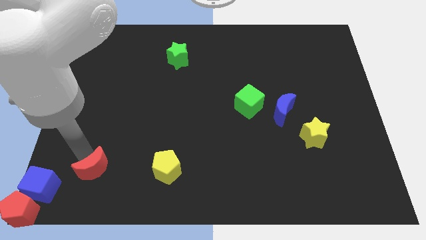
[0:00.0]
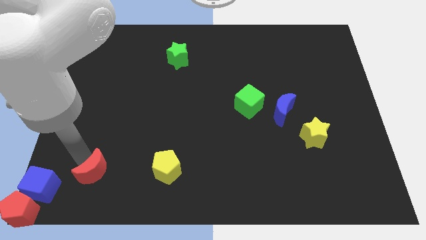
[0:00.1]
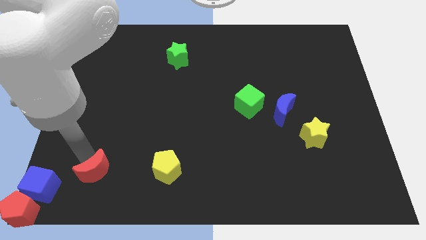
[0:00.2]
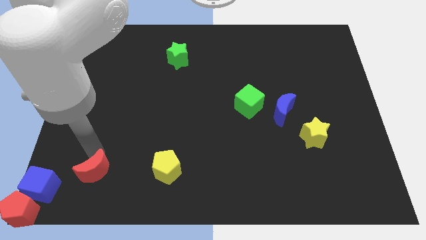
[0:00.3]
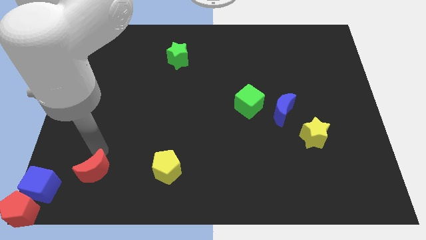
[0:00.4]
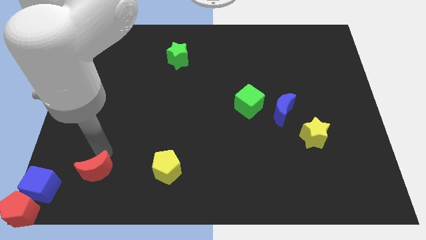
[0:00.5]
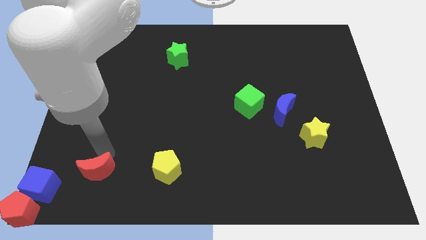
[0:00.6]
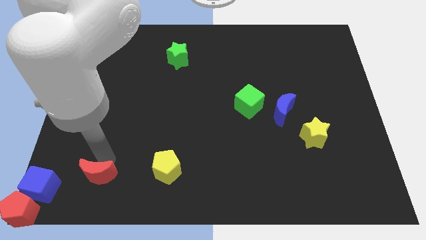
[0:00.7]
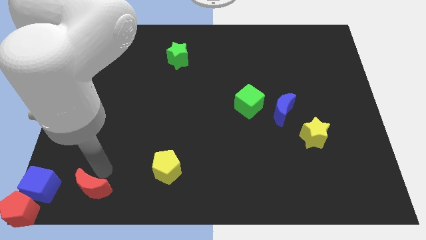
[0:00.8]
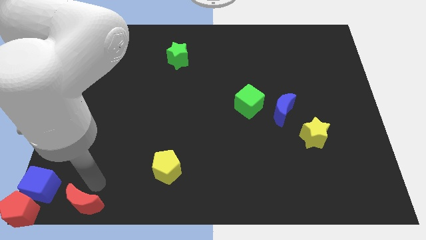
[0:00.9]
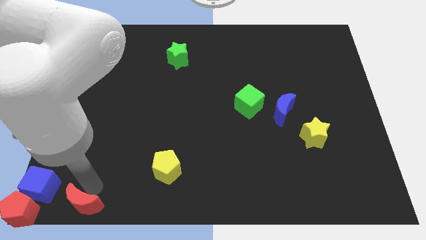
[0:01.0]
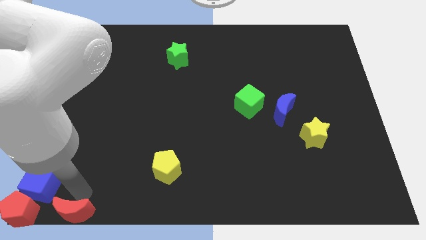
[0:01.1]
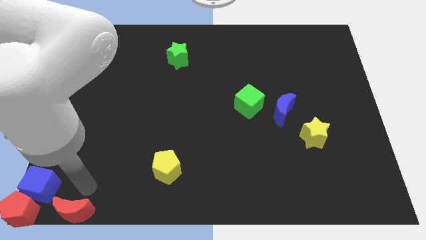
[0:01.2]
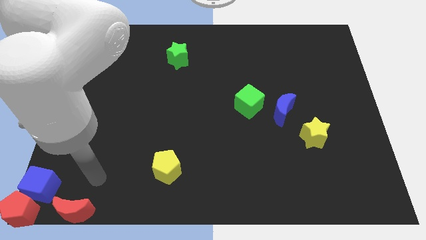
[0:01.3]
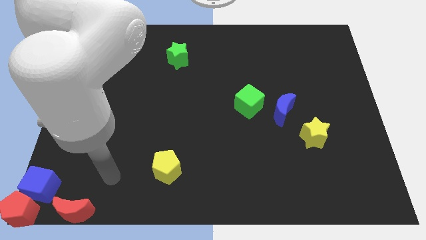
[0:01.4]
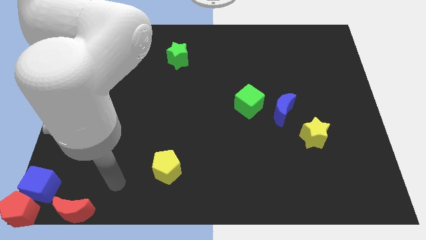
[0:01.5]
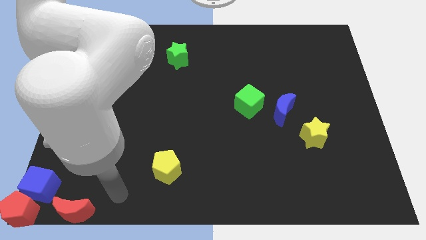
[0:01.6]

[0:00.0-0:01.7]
push red crescent to the right of red pentagon

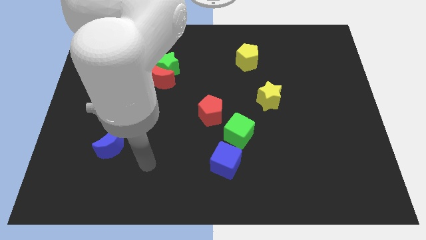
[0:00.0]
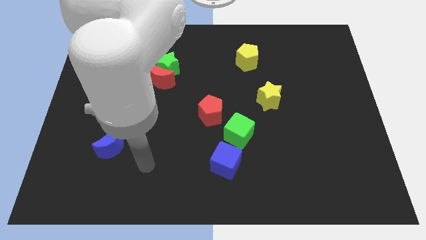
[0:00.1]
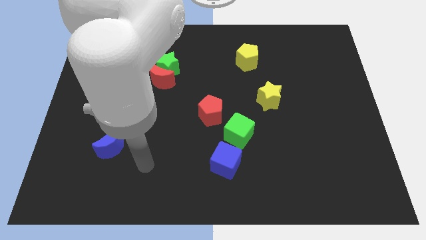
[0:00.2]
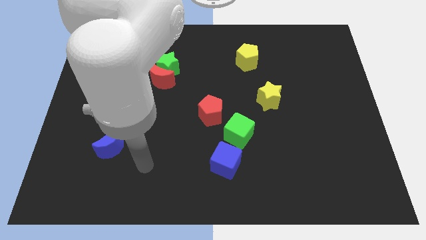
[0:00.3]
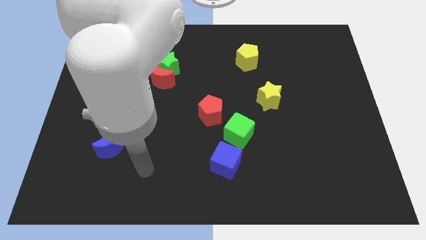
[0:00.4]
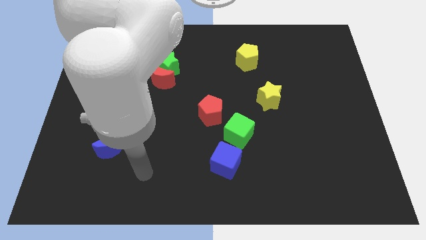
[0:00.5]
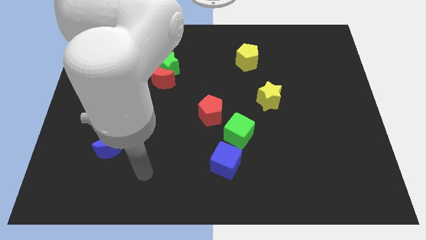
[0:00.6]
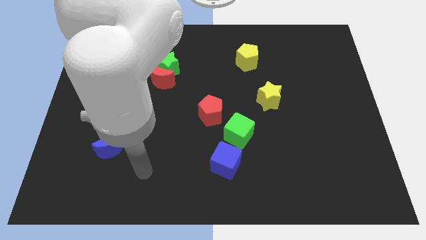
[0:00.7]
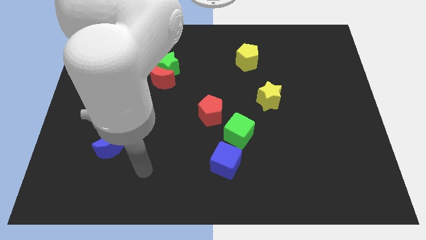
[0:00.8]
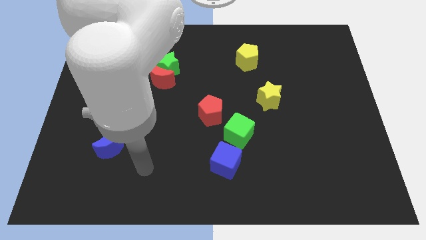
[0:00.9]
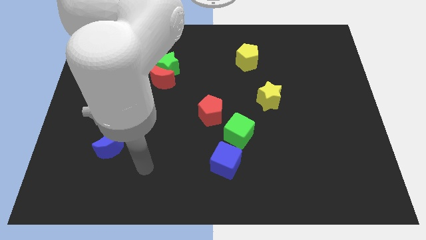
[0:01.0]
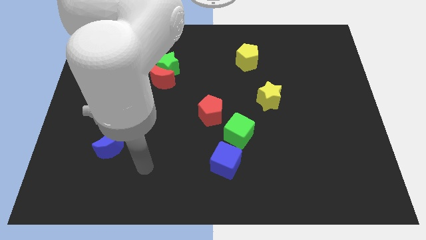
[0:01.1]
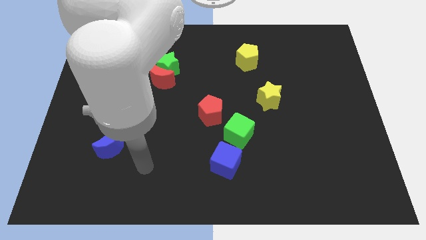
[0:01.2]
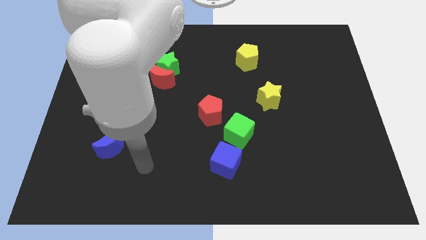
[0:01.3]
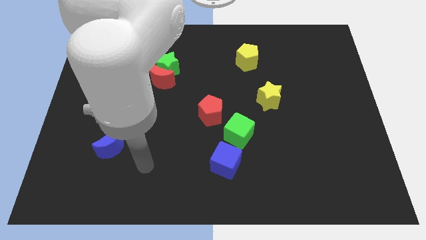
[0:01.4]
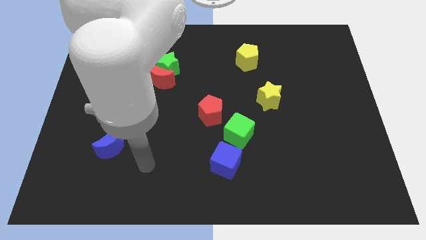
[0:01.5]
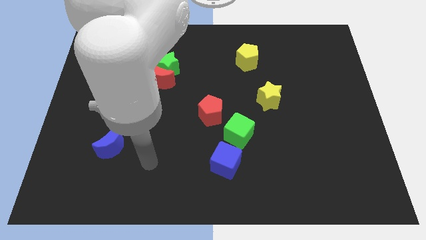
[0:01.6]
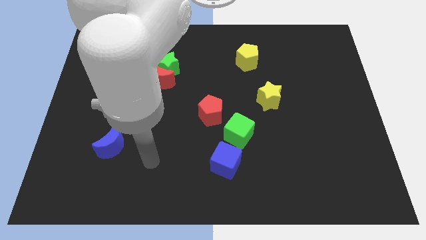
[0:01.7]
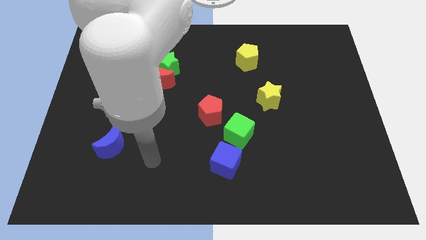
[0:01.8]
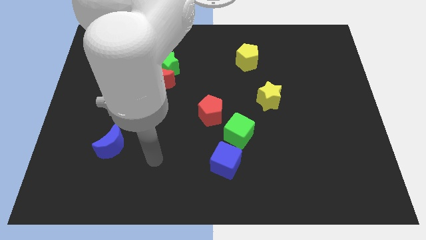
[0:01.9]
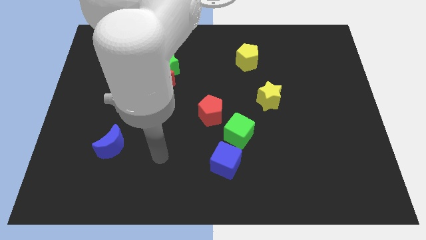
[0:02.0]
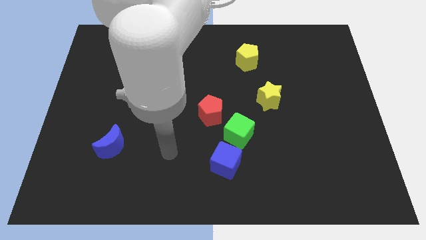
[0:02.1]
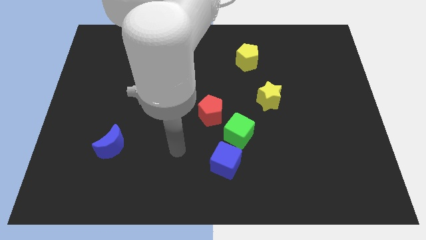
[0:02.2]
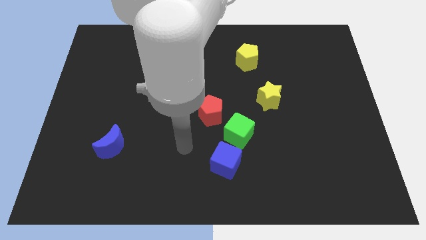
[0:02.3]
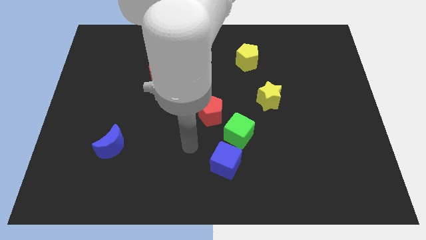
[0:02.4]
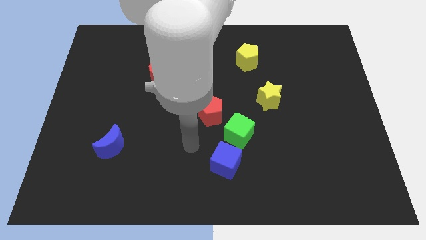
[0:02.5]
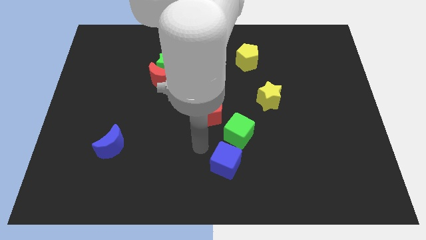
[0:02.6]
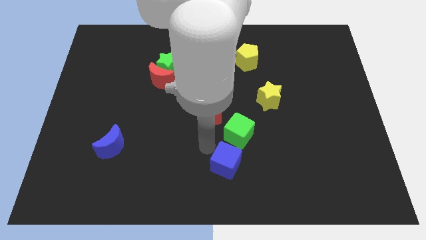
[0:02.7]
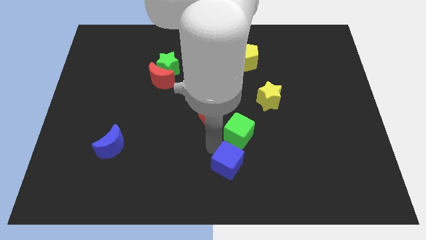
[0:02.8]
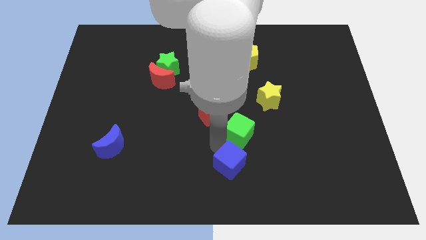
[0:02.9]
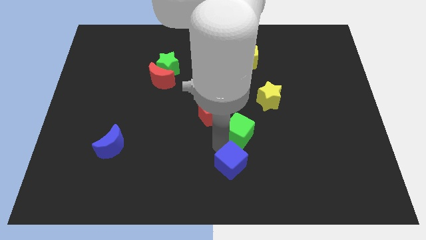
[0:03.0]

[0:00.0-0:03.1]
slightly move the blue cube downside of the board

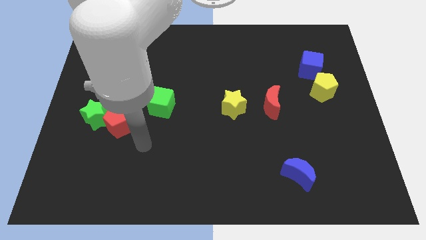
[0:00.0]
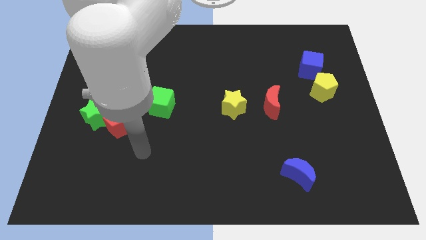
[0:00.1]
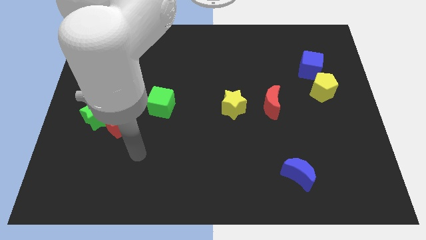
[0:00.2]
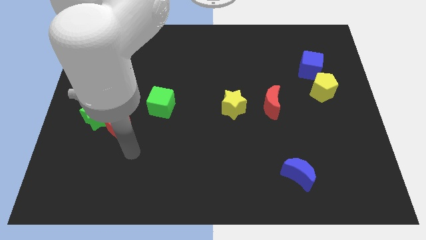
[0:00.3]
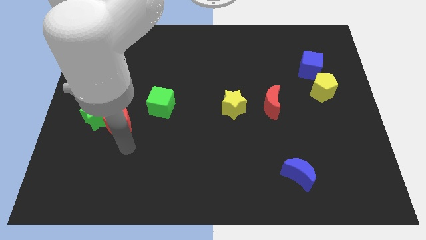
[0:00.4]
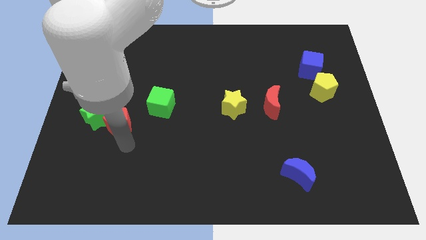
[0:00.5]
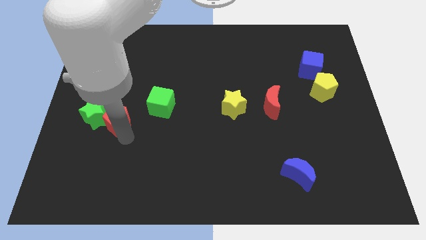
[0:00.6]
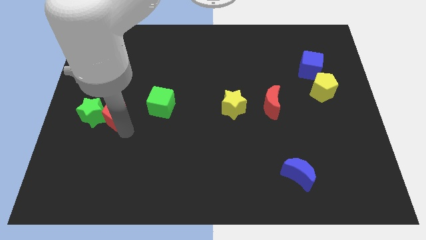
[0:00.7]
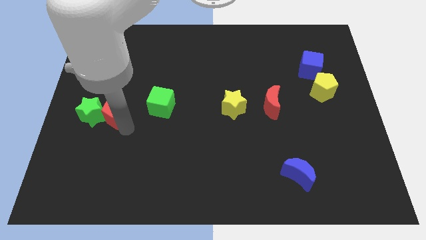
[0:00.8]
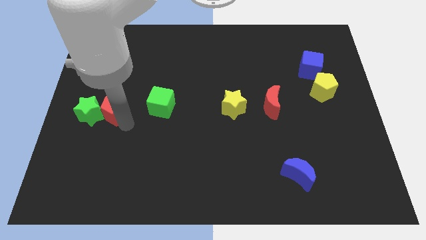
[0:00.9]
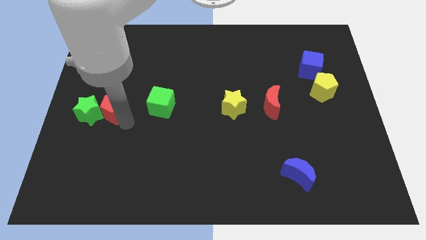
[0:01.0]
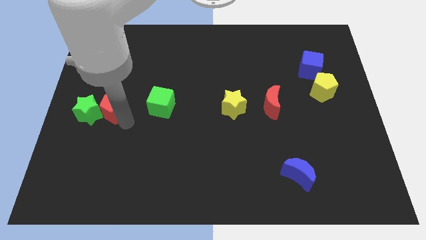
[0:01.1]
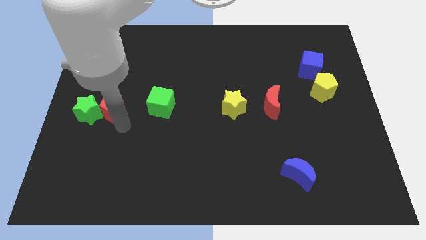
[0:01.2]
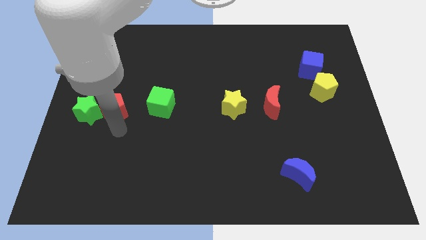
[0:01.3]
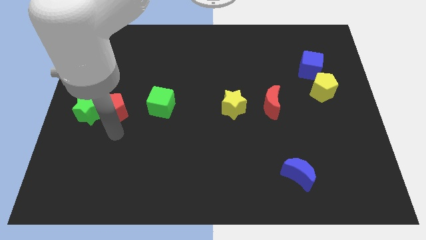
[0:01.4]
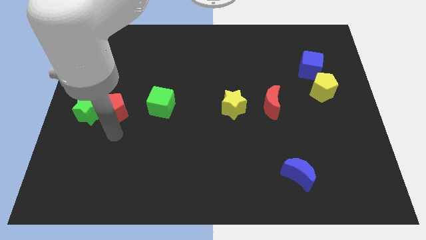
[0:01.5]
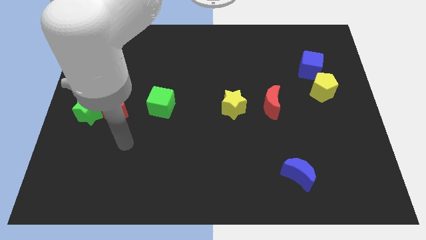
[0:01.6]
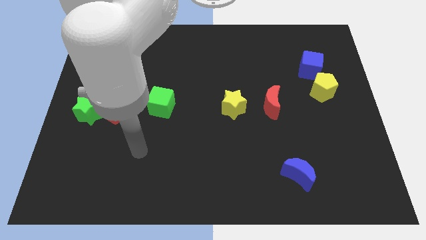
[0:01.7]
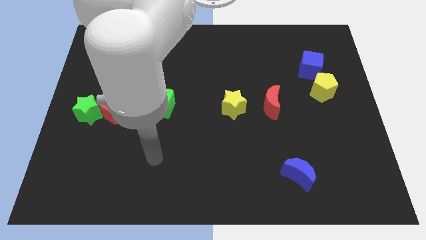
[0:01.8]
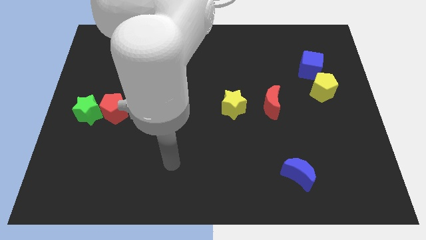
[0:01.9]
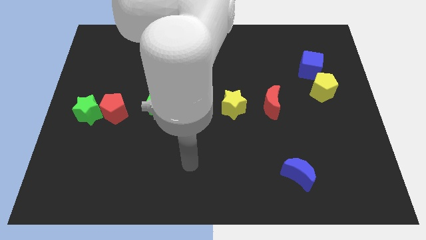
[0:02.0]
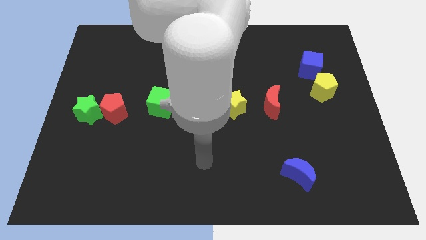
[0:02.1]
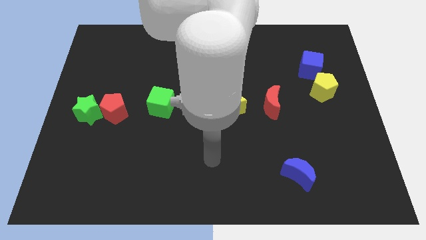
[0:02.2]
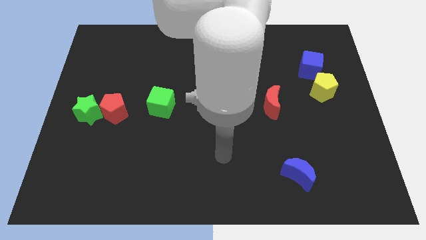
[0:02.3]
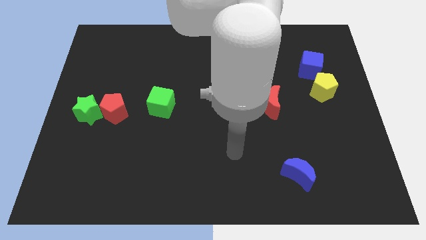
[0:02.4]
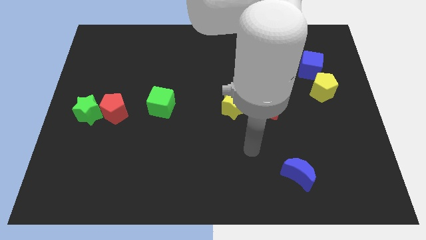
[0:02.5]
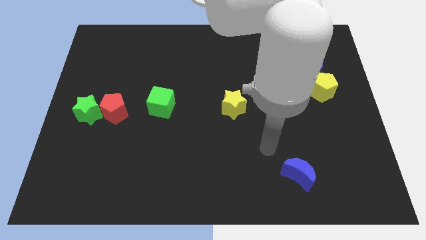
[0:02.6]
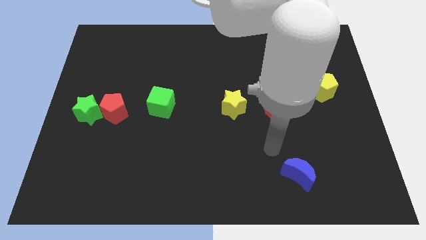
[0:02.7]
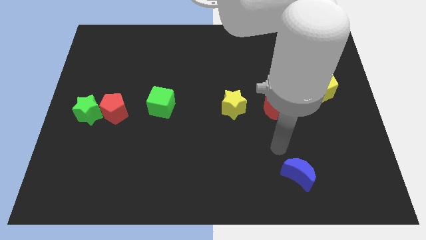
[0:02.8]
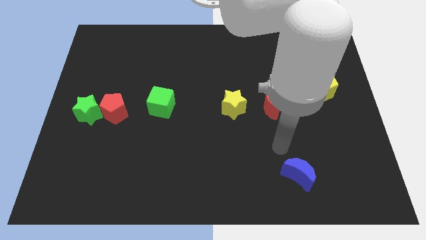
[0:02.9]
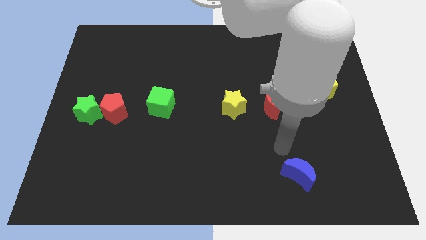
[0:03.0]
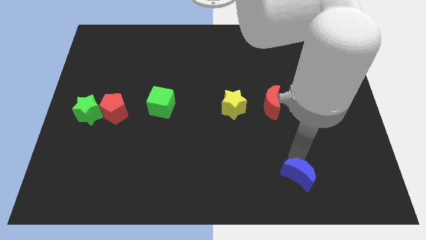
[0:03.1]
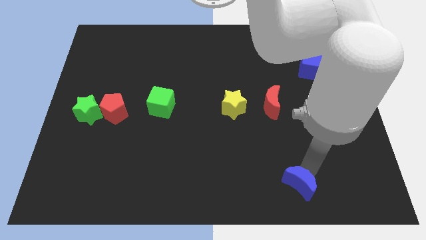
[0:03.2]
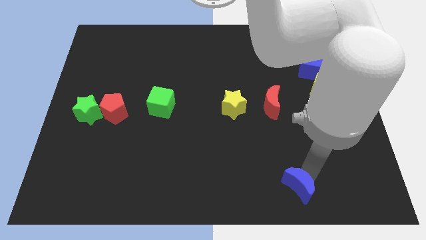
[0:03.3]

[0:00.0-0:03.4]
place red pentagon in between of green star green cube slightly touch blue moon

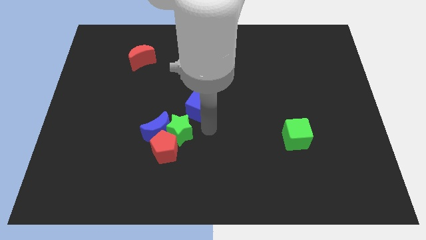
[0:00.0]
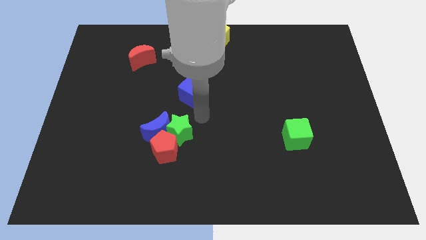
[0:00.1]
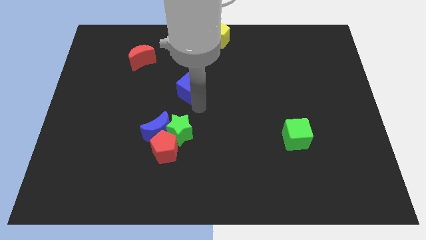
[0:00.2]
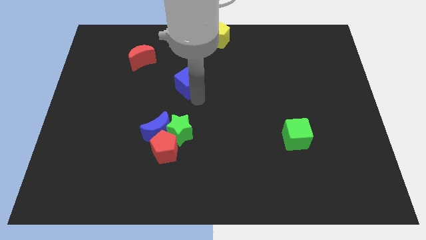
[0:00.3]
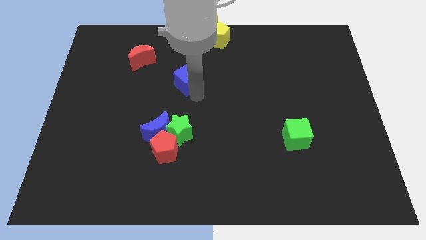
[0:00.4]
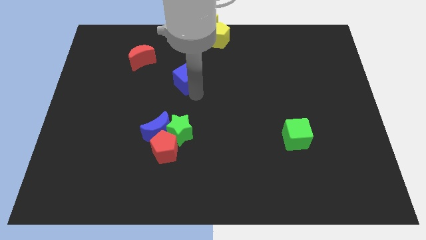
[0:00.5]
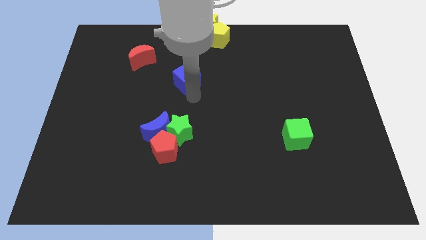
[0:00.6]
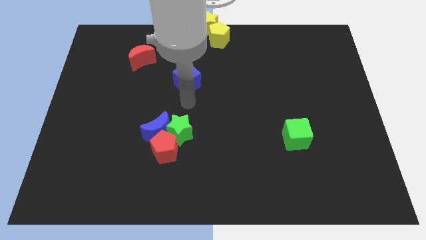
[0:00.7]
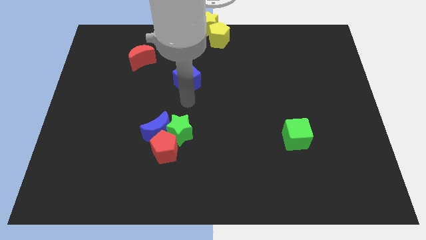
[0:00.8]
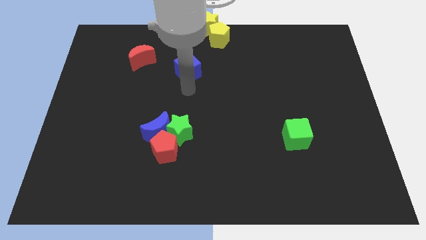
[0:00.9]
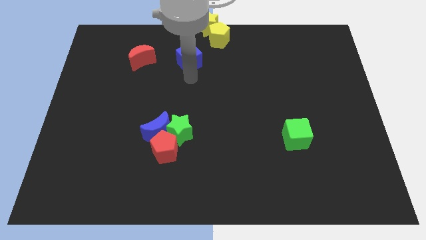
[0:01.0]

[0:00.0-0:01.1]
move the blue cube away from the green star
